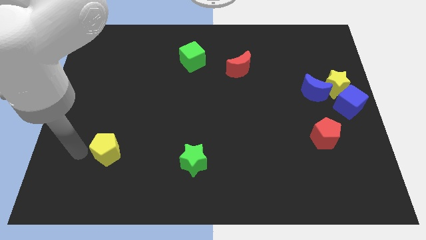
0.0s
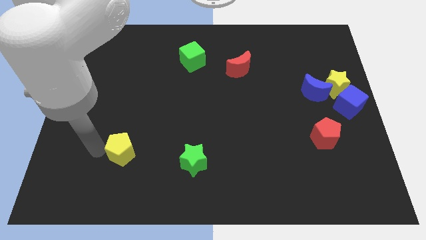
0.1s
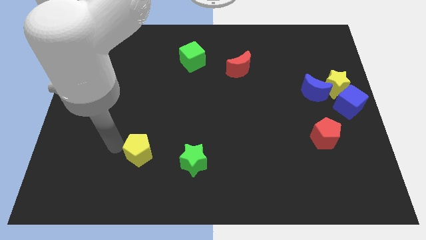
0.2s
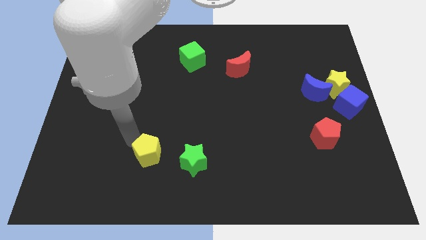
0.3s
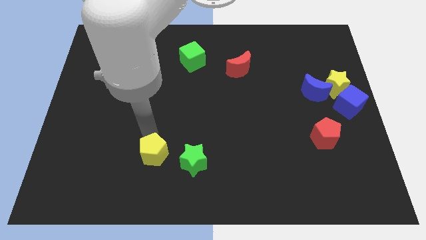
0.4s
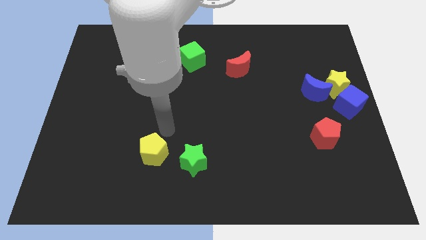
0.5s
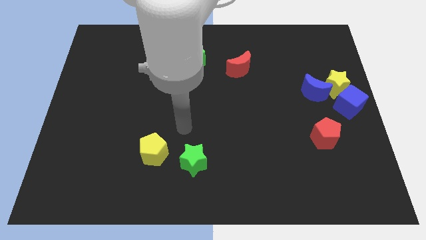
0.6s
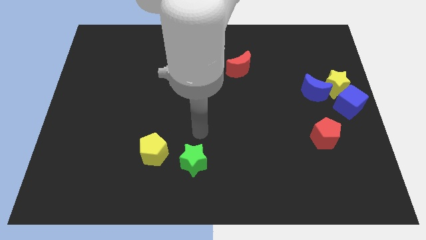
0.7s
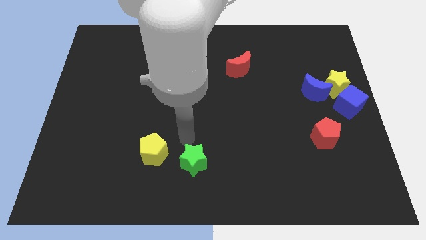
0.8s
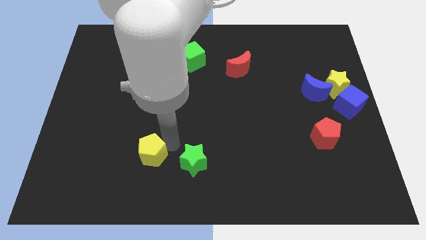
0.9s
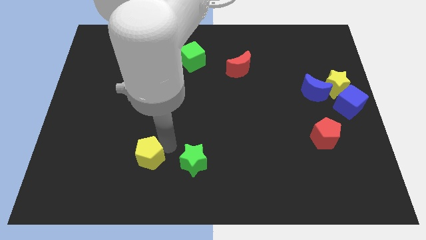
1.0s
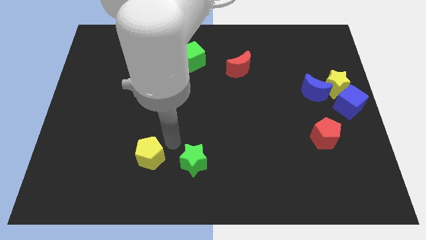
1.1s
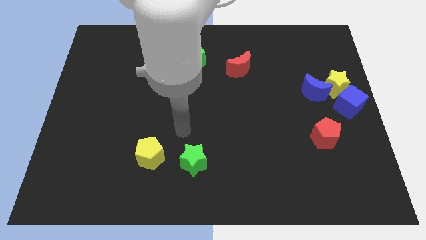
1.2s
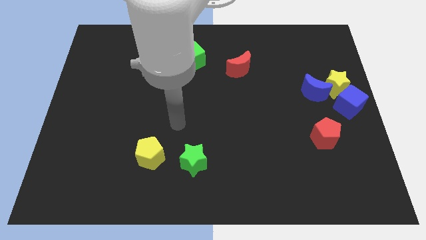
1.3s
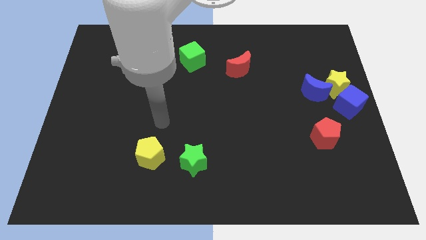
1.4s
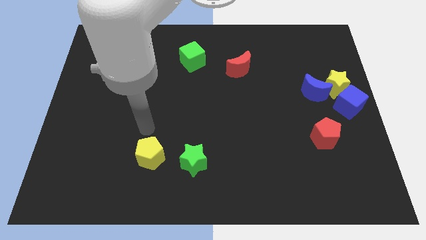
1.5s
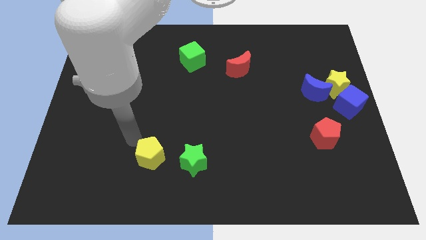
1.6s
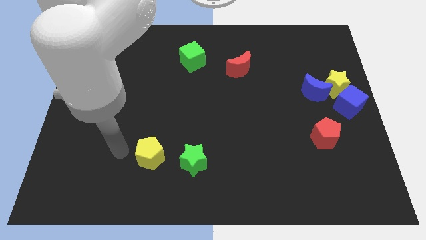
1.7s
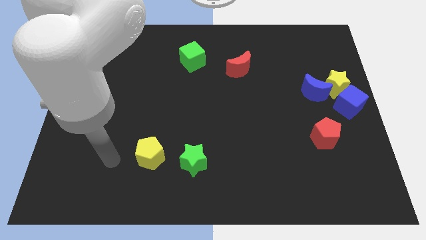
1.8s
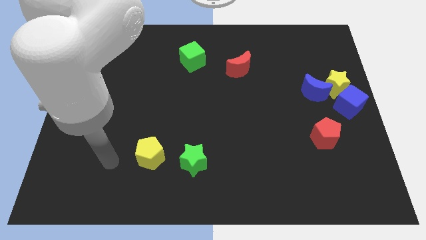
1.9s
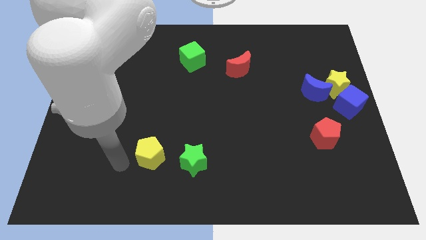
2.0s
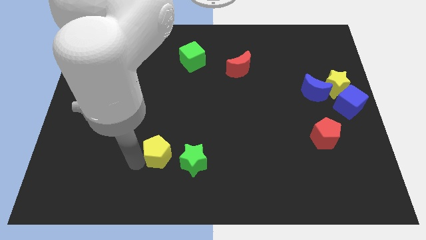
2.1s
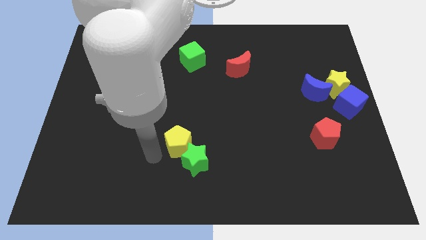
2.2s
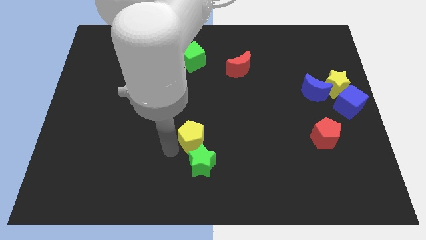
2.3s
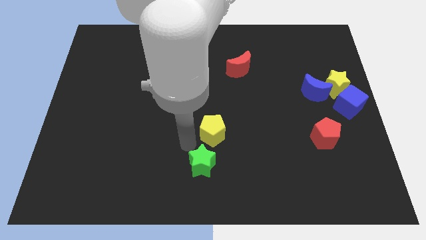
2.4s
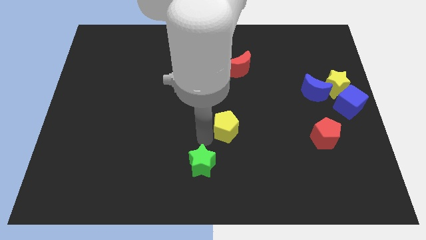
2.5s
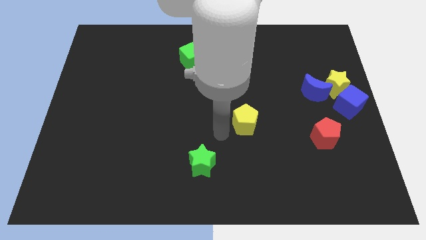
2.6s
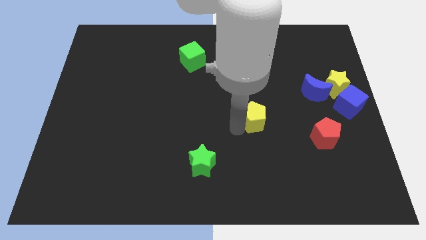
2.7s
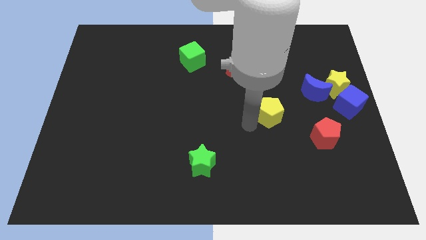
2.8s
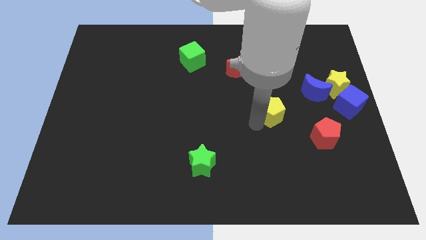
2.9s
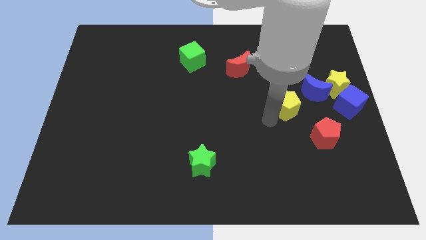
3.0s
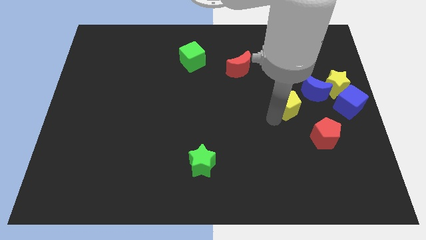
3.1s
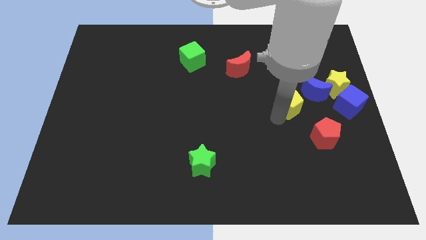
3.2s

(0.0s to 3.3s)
push the yellow pentagon diagonally towards the bottom of blue crescent

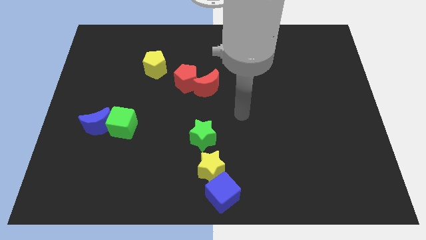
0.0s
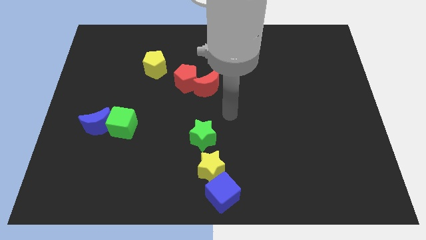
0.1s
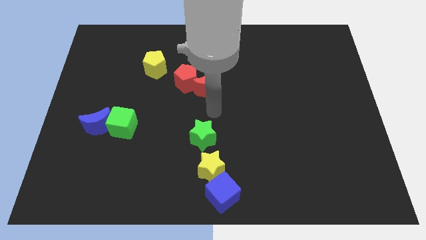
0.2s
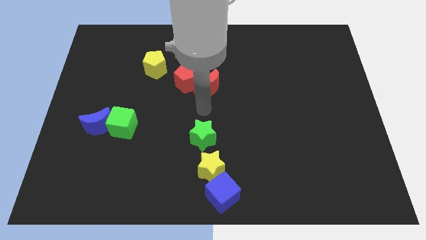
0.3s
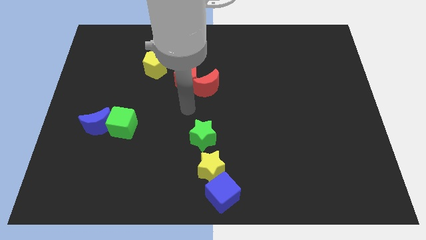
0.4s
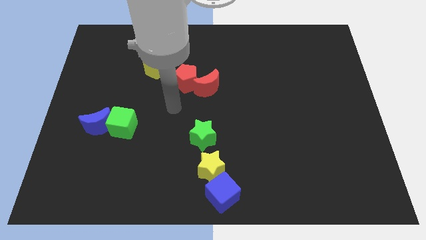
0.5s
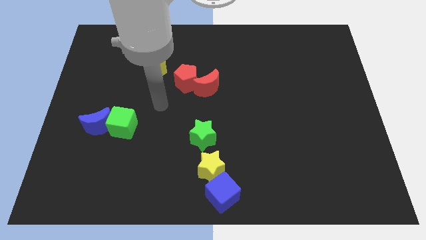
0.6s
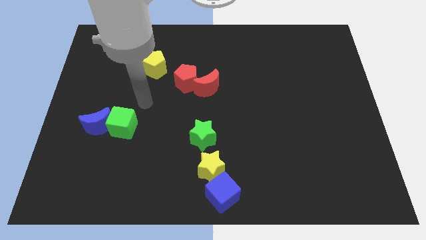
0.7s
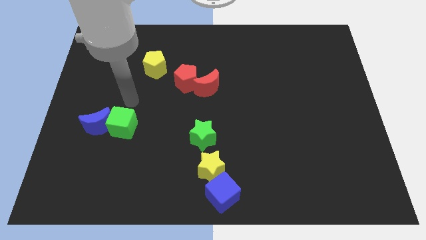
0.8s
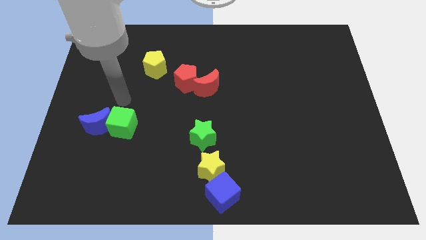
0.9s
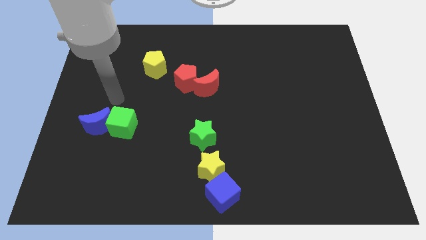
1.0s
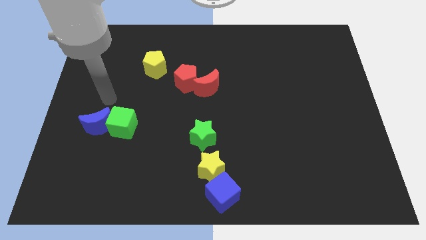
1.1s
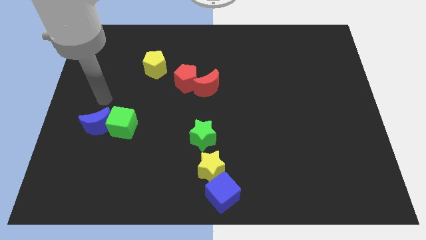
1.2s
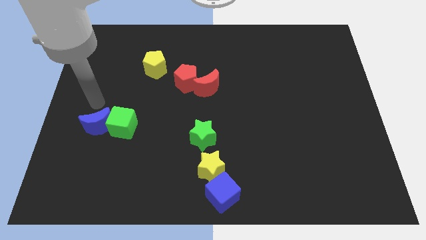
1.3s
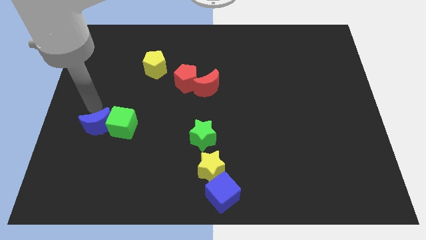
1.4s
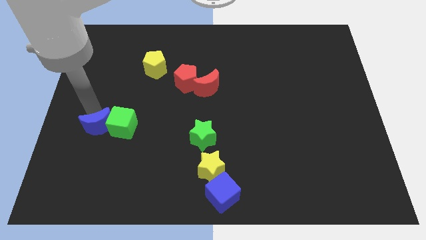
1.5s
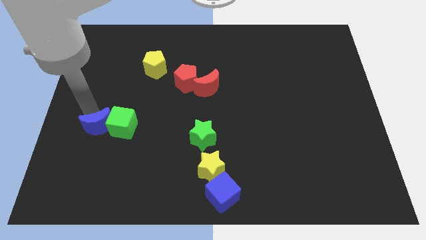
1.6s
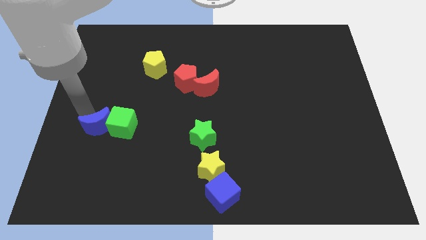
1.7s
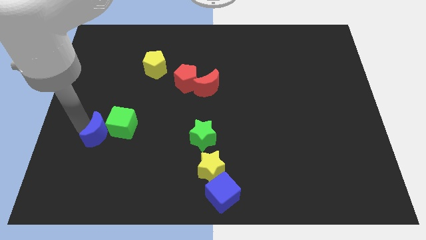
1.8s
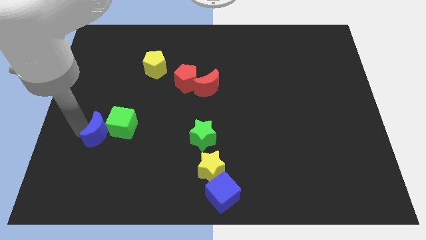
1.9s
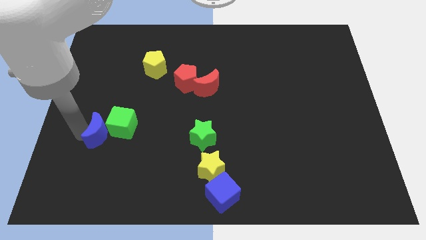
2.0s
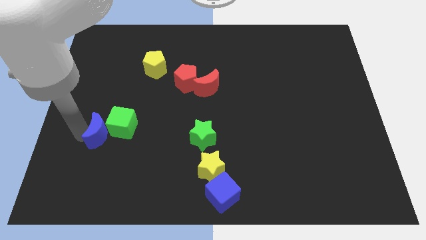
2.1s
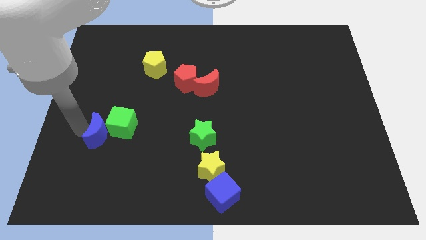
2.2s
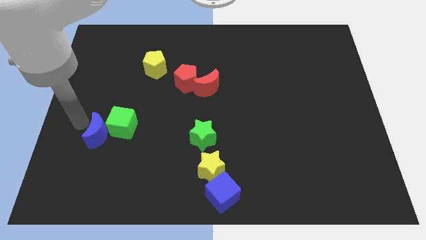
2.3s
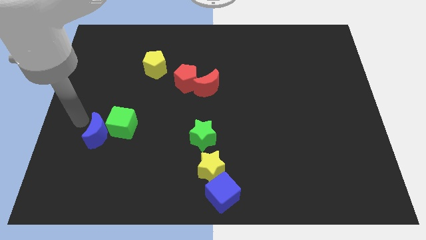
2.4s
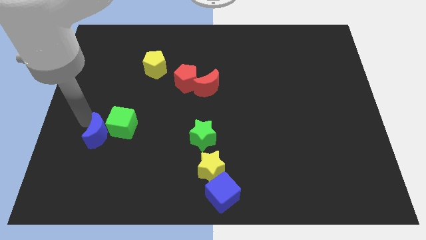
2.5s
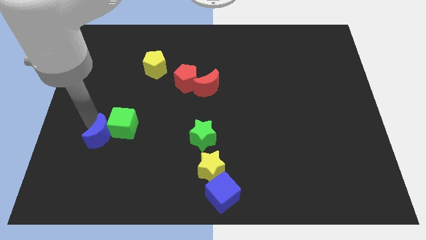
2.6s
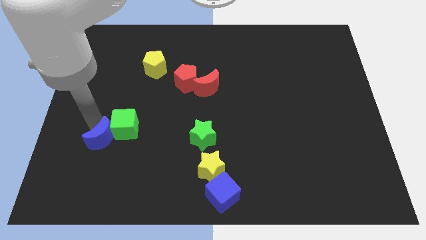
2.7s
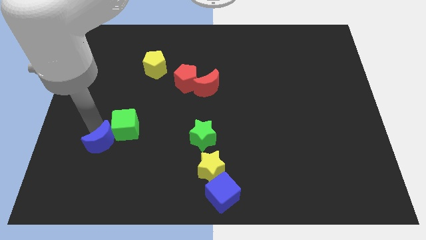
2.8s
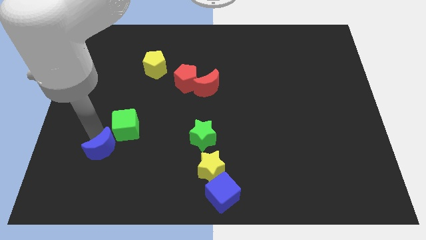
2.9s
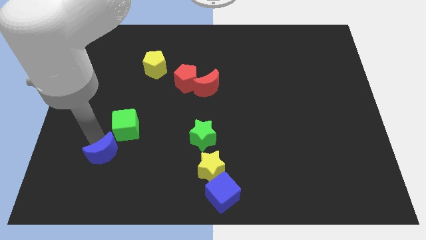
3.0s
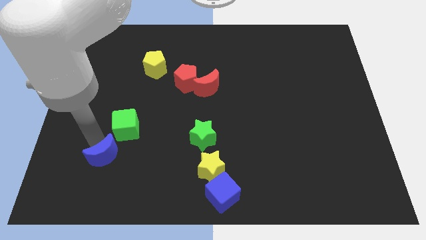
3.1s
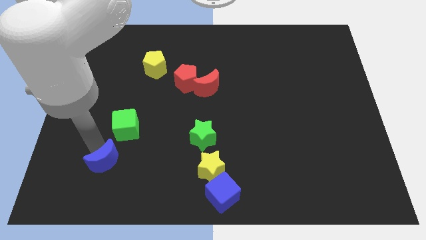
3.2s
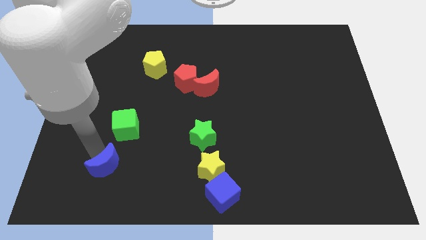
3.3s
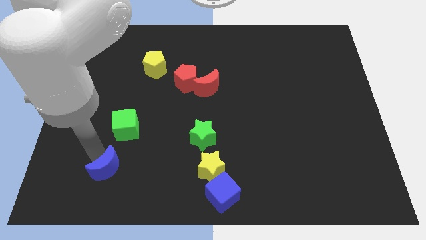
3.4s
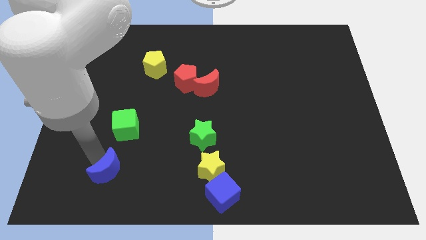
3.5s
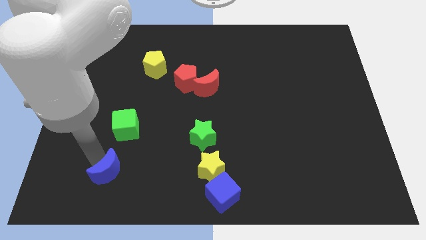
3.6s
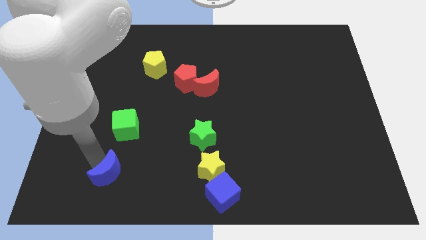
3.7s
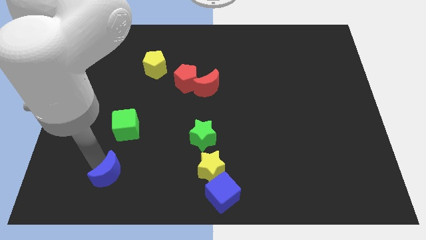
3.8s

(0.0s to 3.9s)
separate blue crescent from green cube

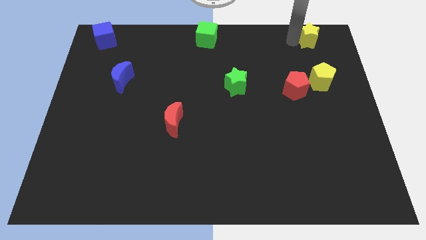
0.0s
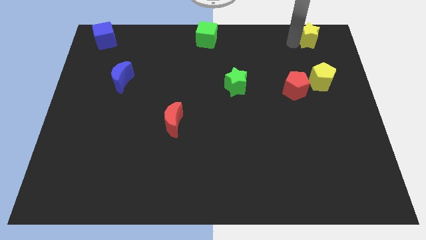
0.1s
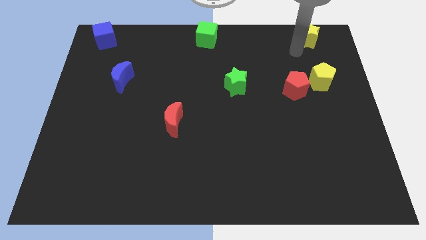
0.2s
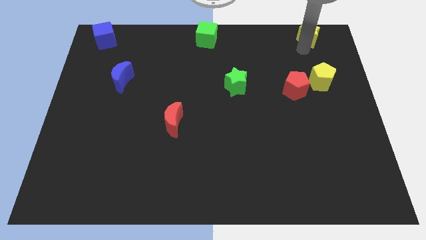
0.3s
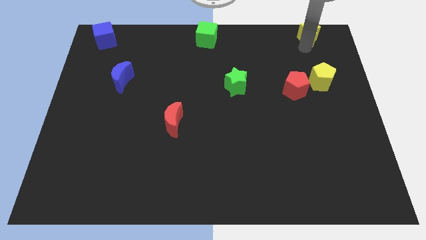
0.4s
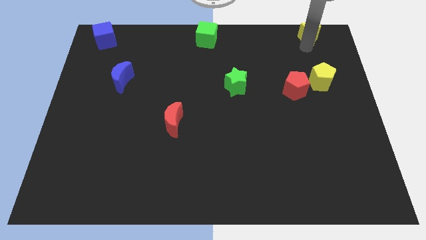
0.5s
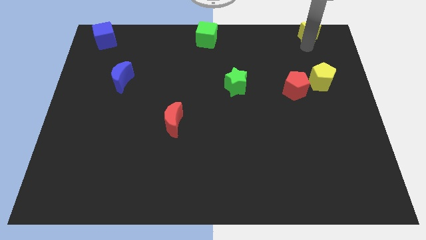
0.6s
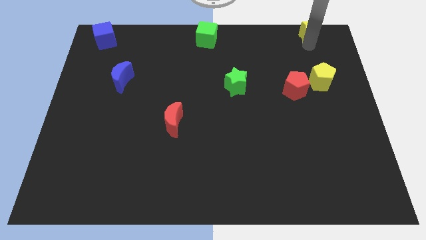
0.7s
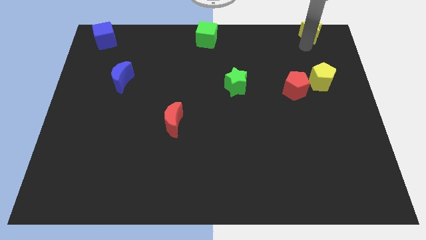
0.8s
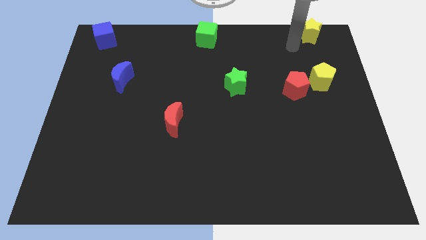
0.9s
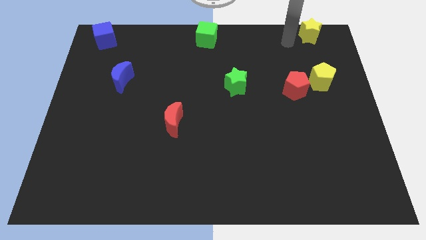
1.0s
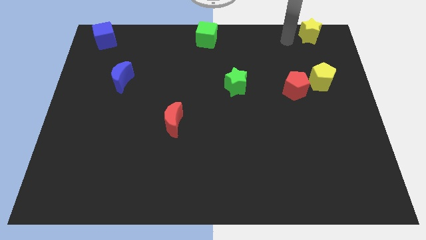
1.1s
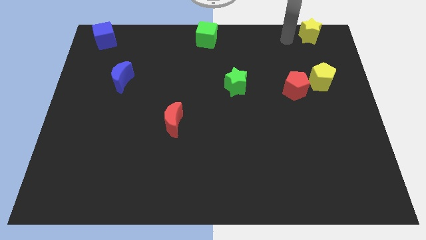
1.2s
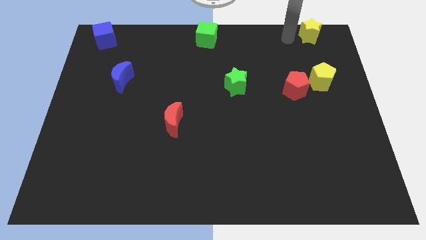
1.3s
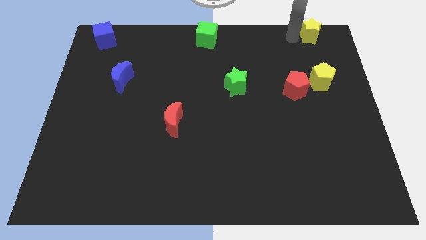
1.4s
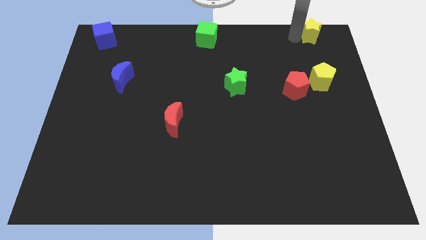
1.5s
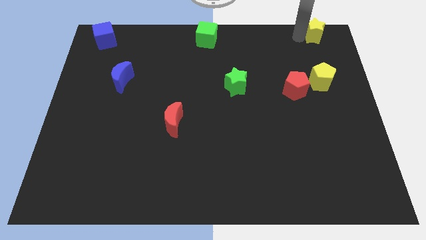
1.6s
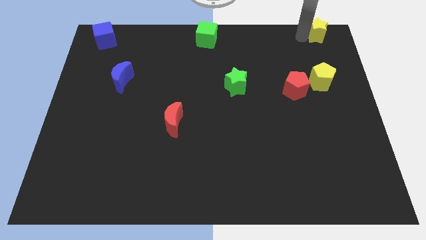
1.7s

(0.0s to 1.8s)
move the yellow star to the top right of the board

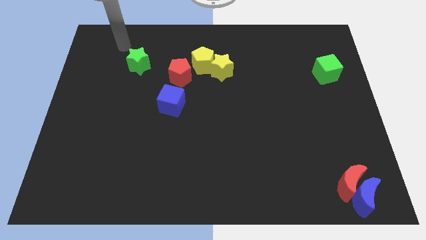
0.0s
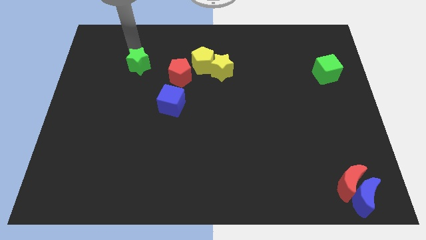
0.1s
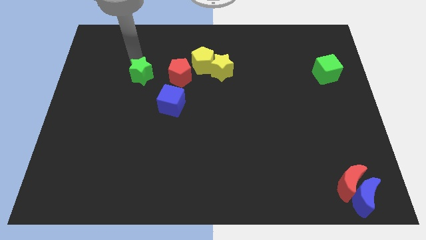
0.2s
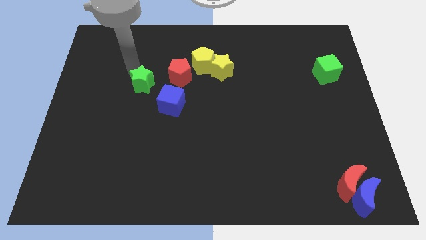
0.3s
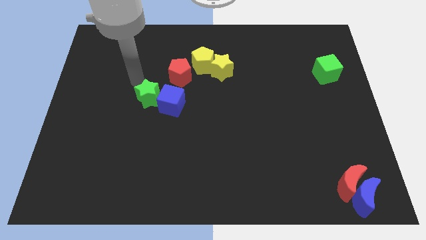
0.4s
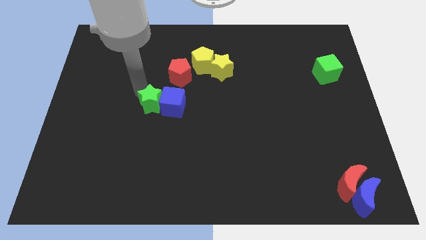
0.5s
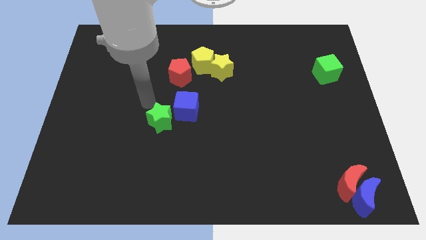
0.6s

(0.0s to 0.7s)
push the green star into the blue cube
